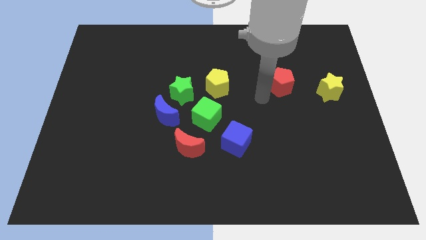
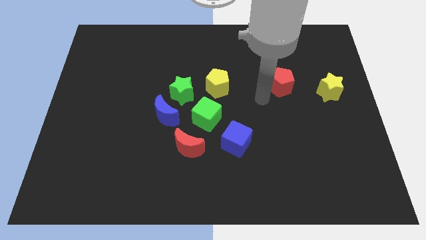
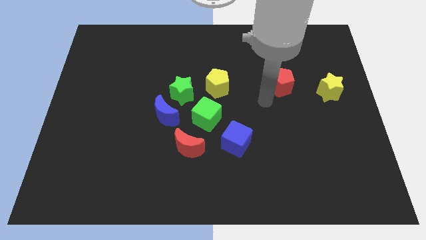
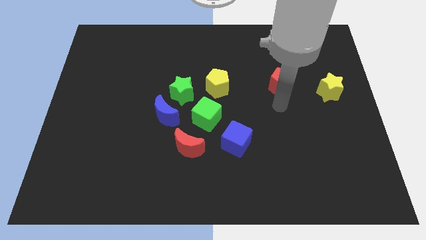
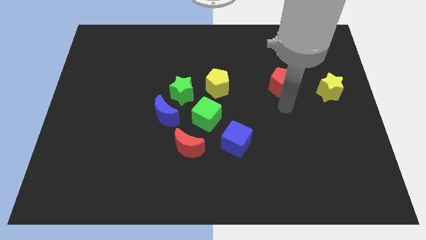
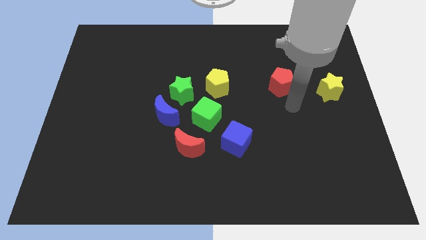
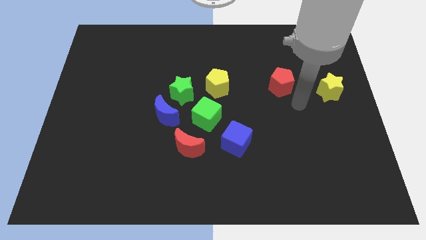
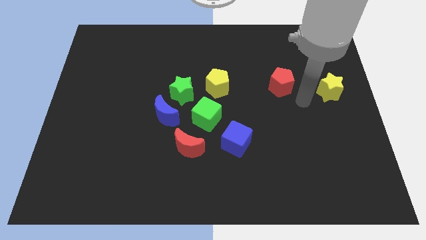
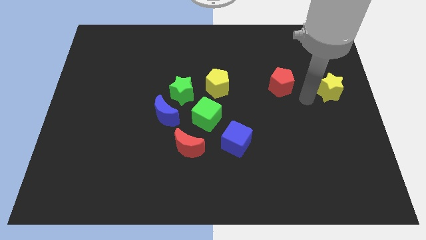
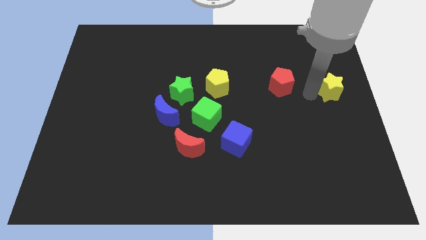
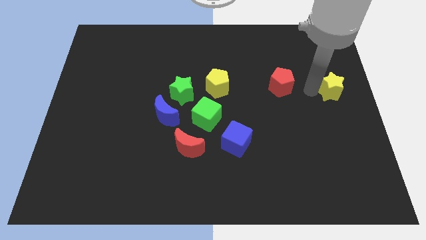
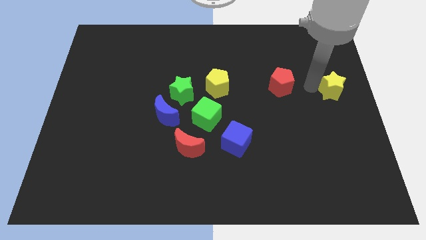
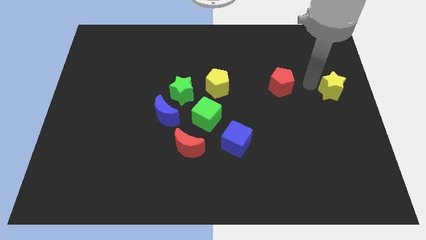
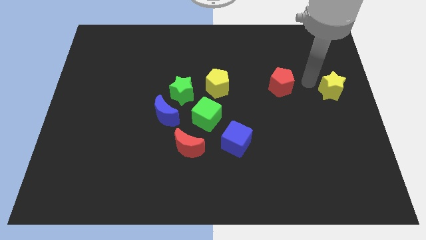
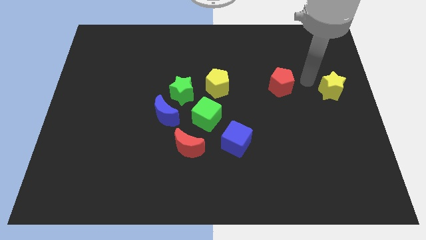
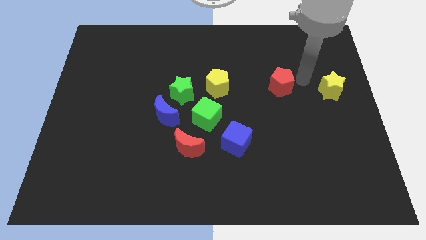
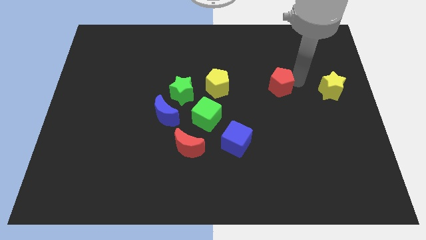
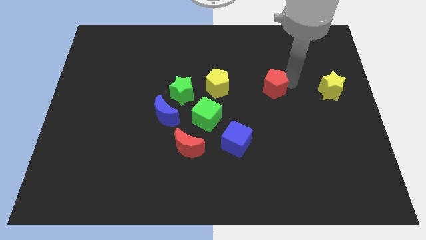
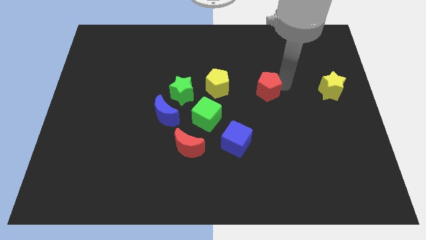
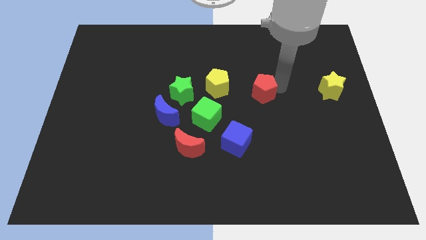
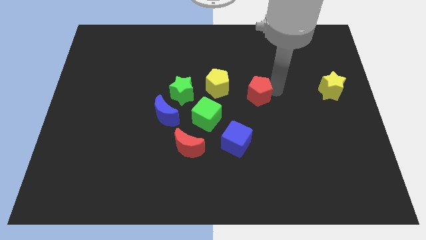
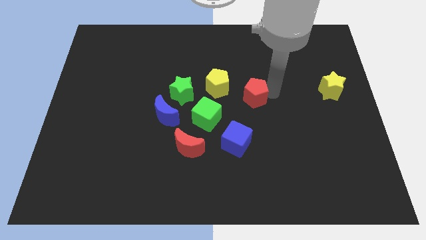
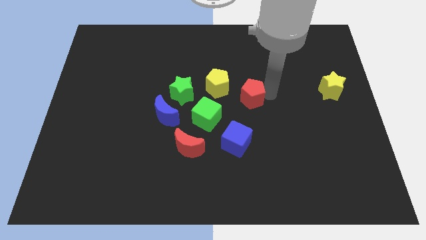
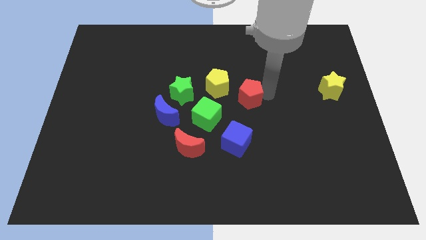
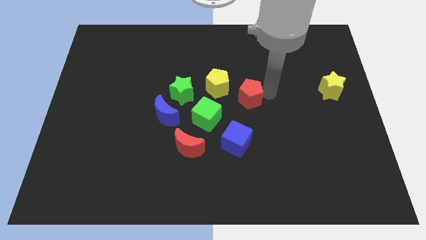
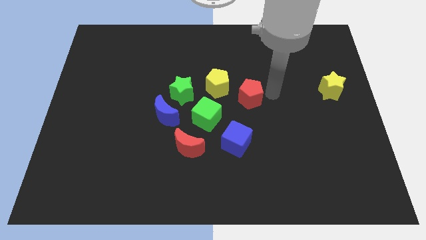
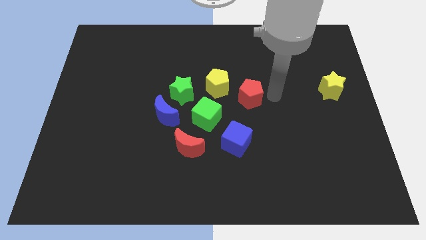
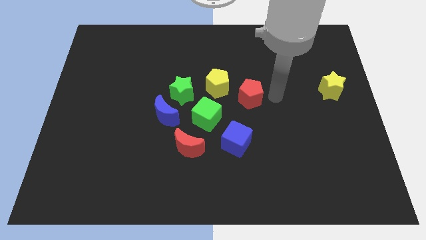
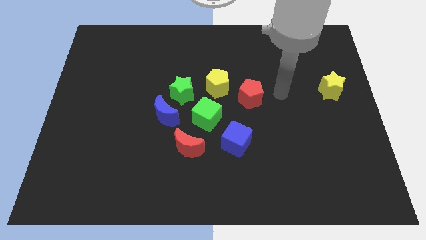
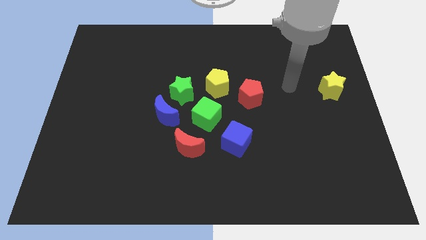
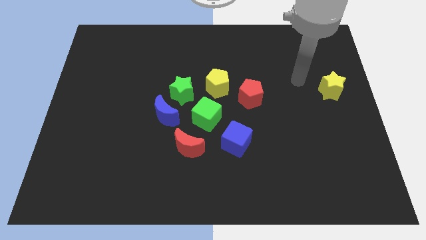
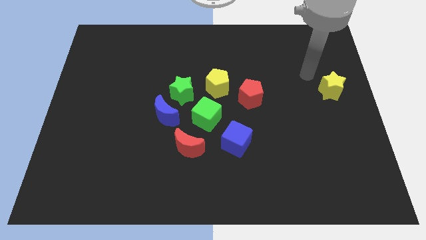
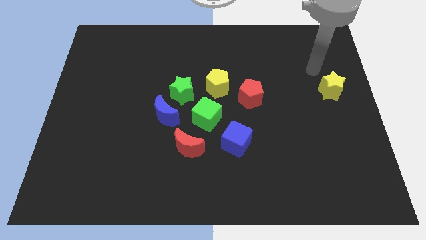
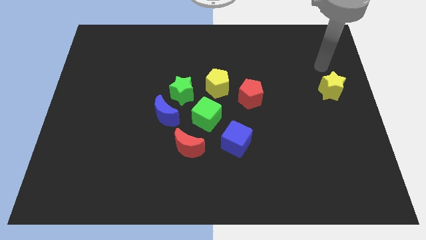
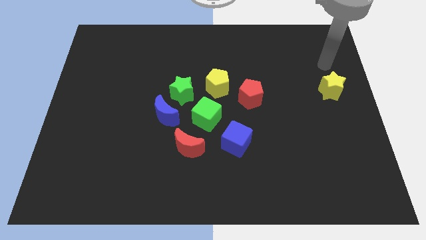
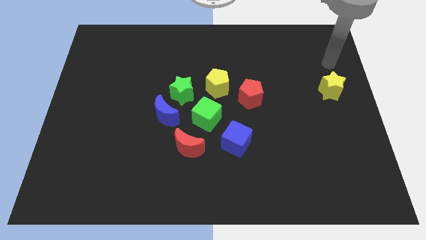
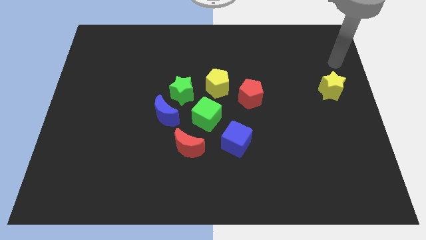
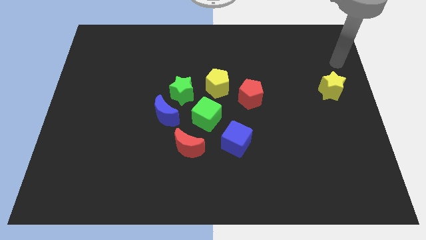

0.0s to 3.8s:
move the red pentagon slightly to the right of the green cube

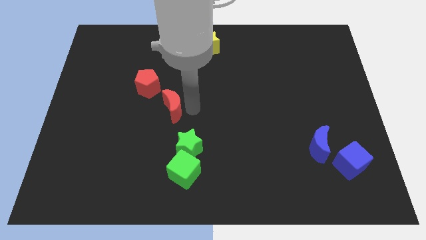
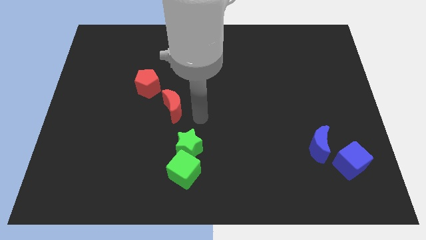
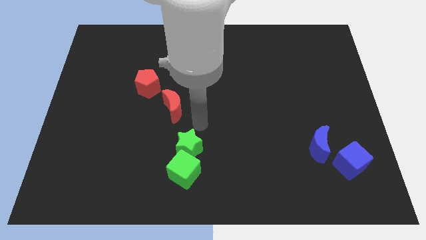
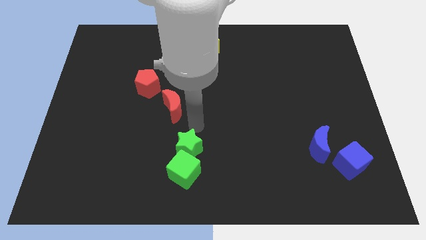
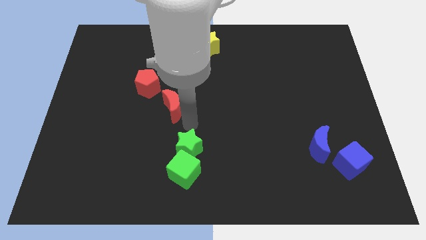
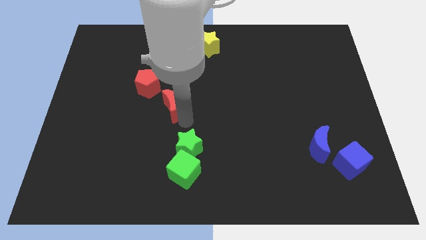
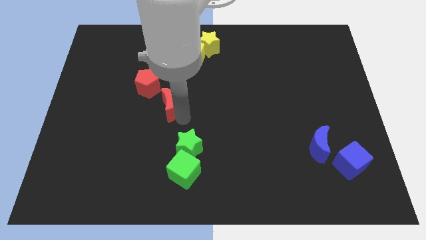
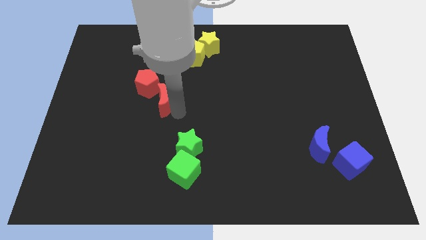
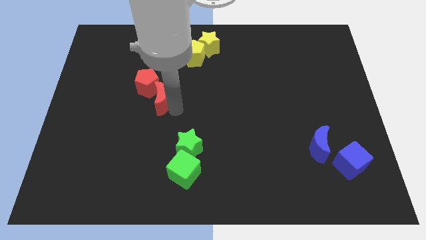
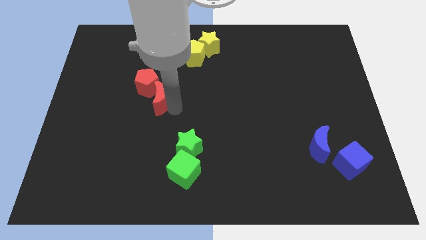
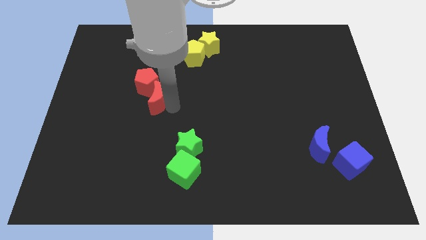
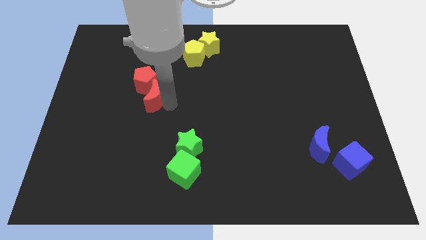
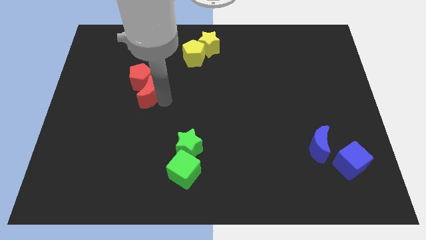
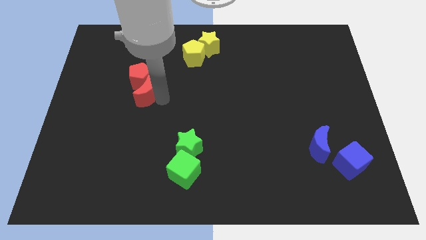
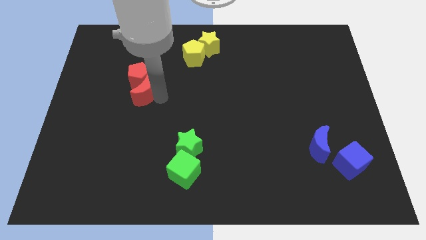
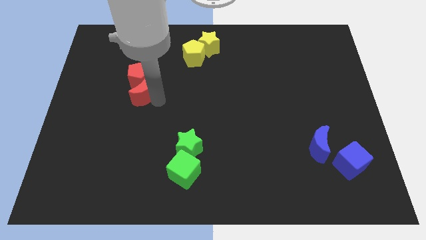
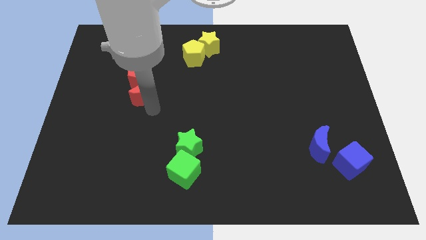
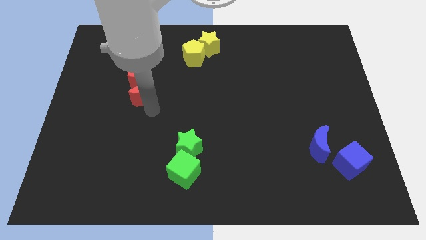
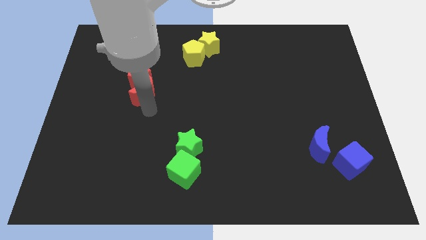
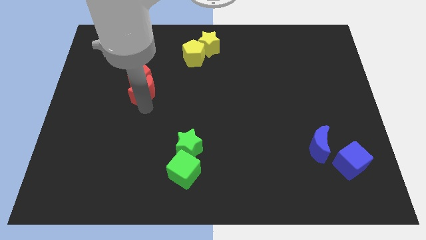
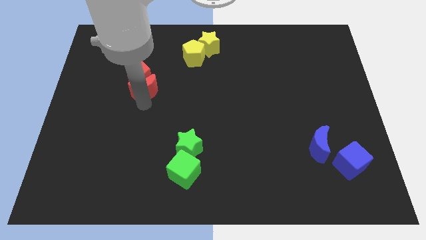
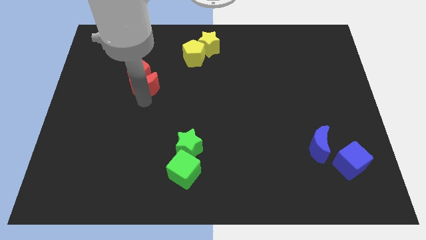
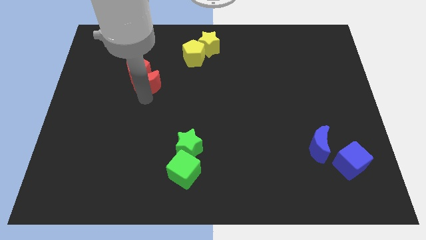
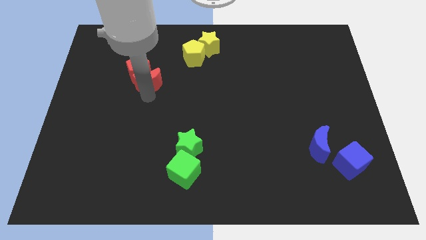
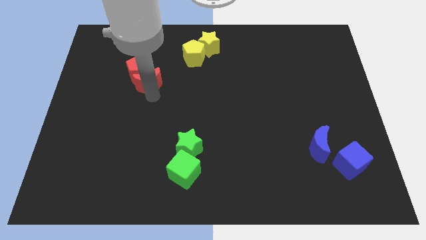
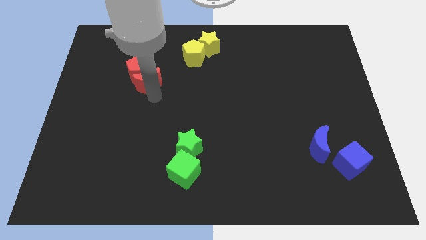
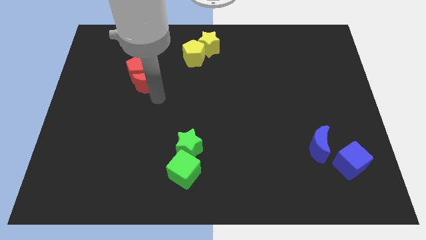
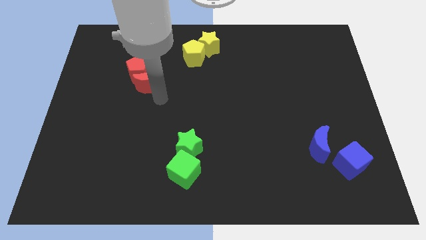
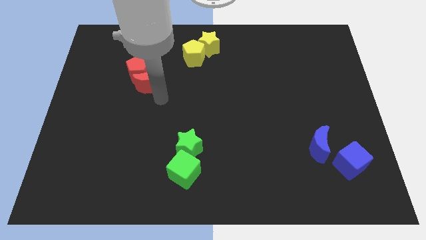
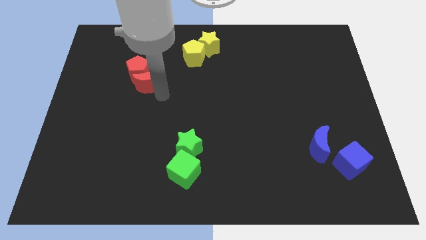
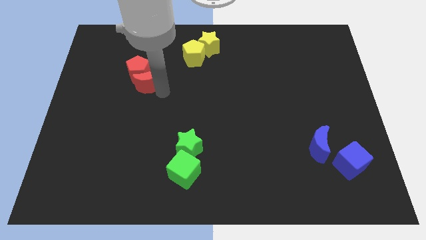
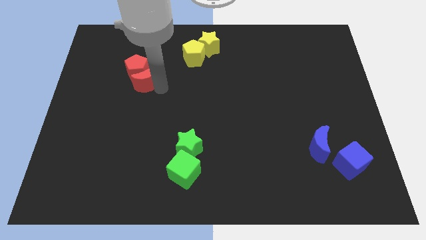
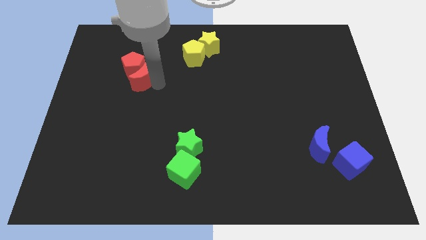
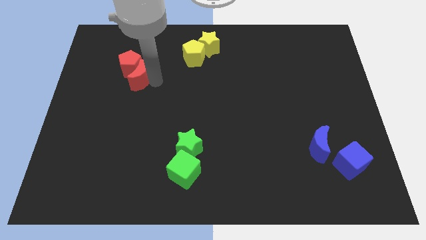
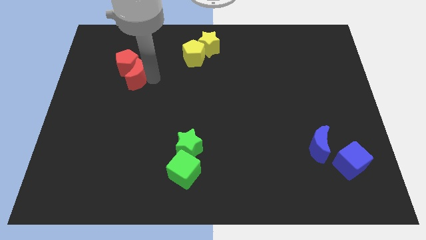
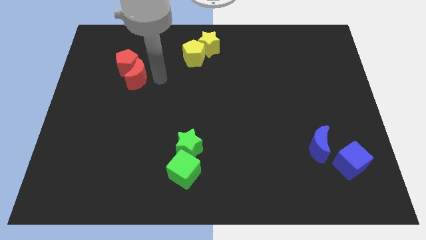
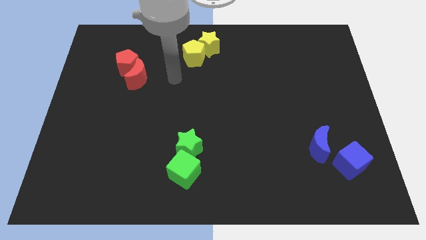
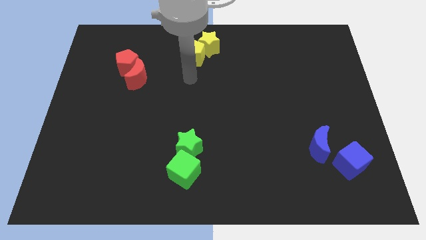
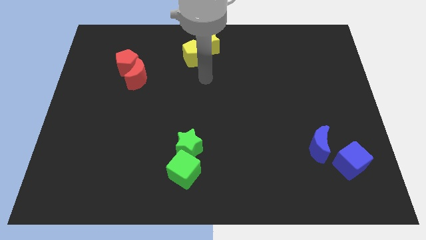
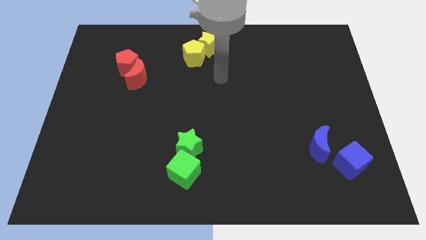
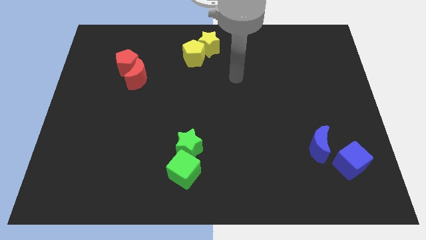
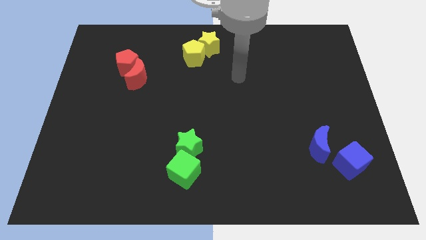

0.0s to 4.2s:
place red moon below red pentagon

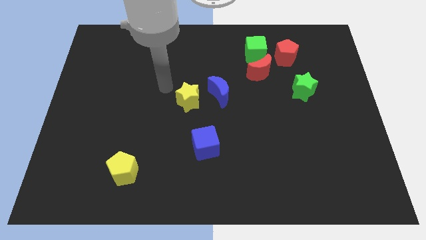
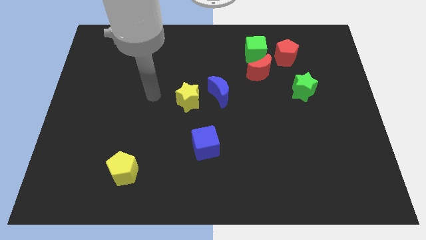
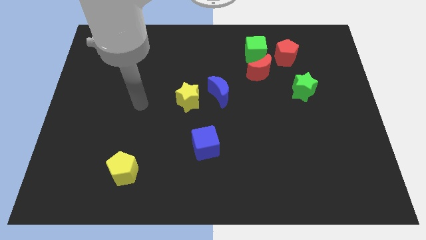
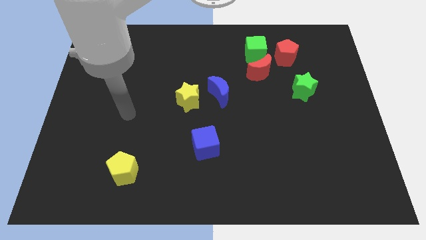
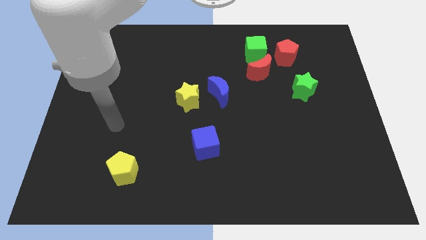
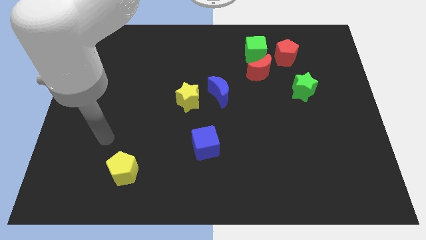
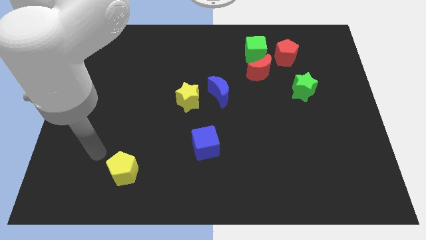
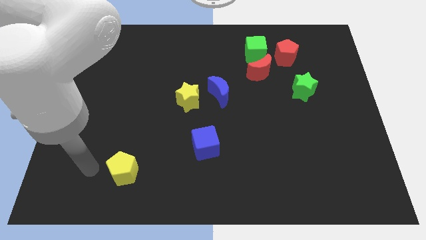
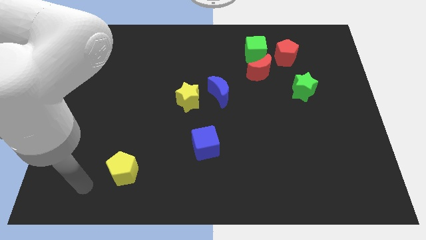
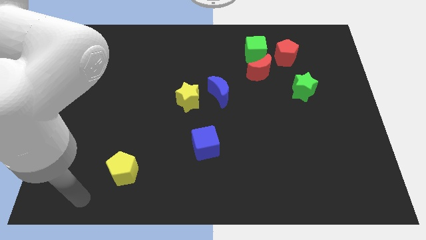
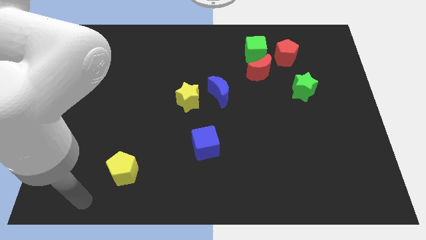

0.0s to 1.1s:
move your arm towards the bottom side of the board
